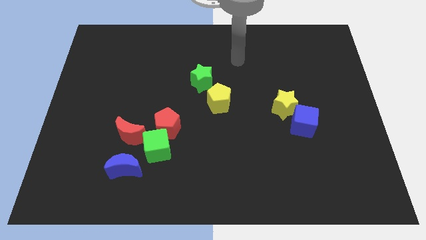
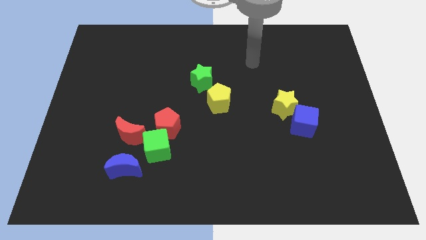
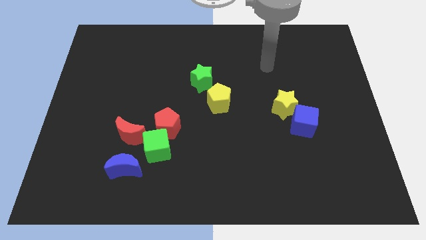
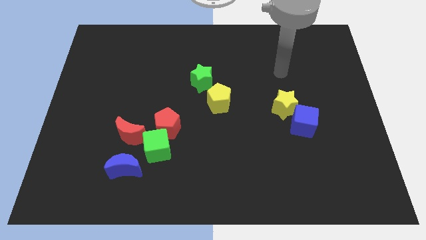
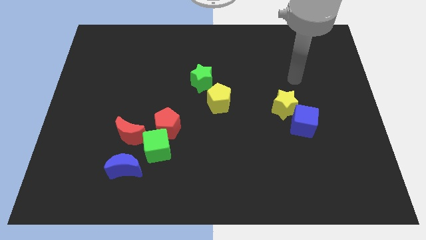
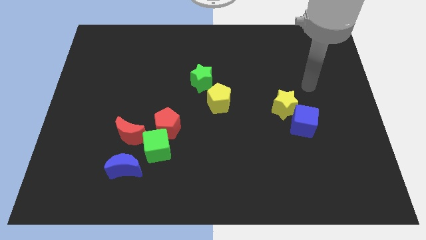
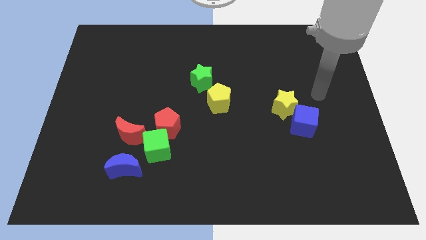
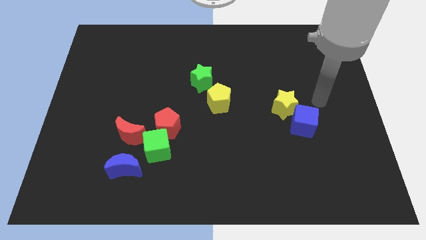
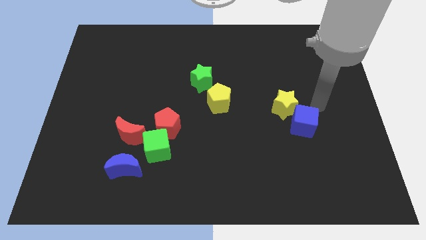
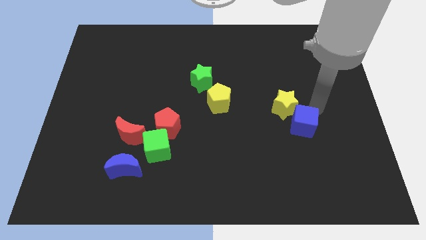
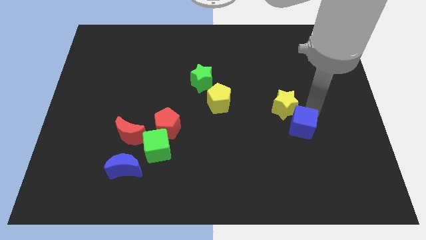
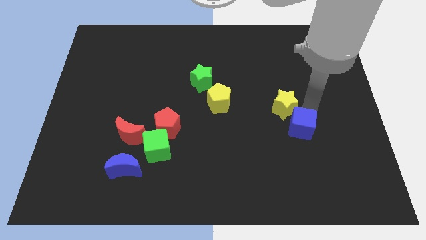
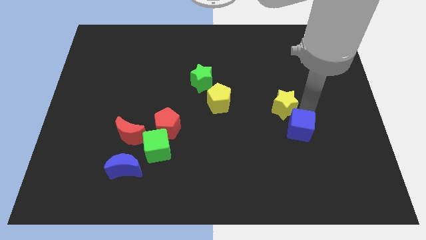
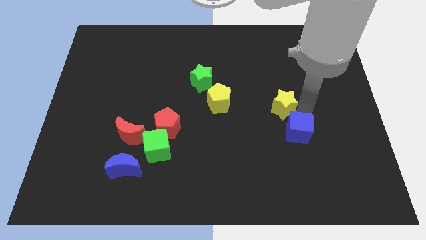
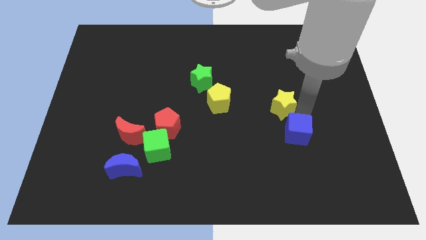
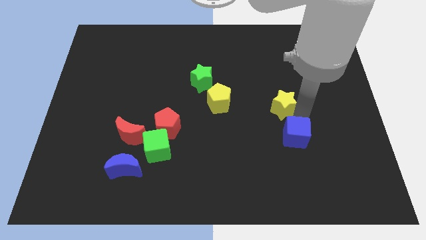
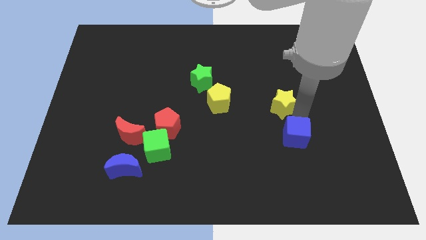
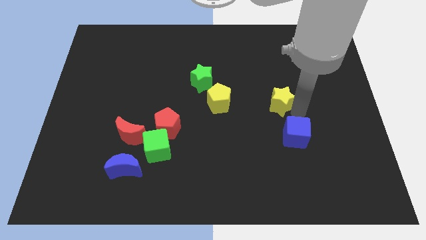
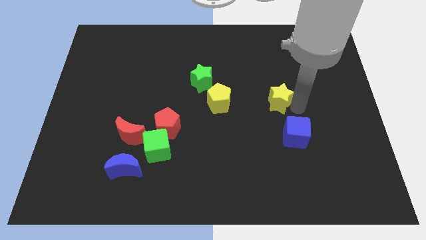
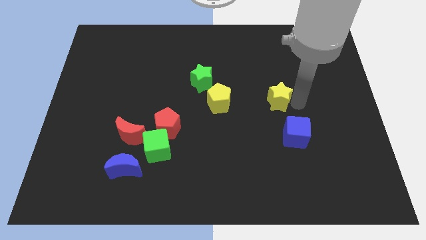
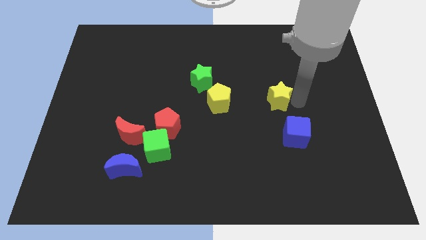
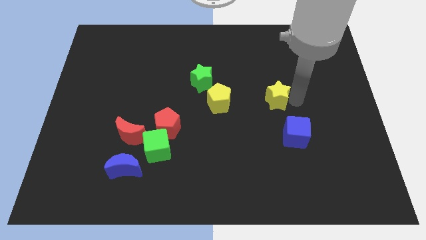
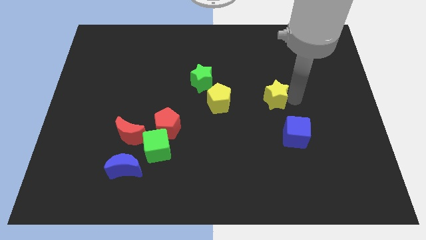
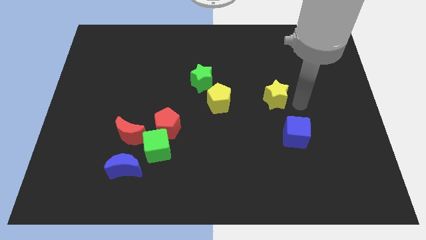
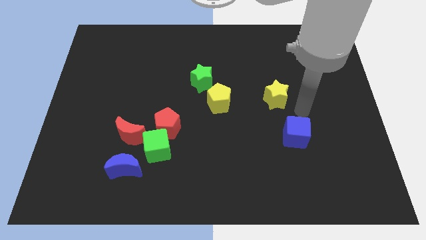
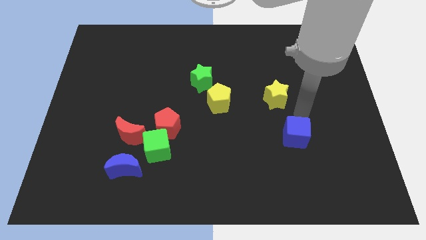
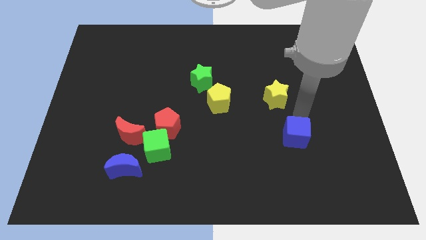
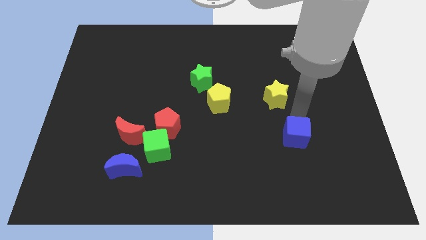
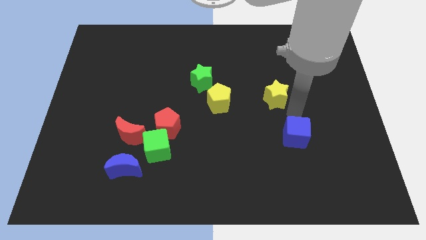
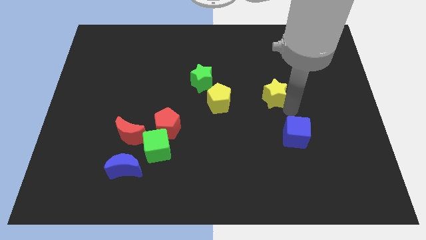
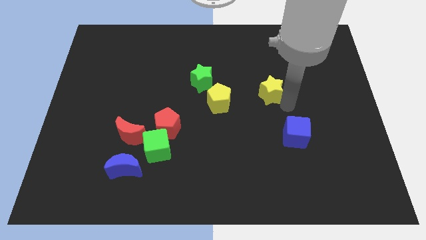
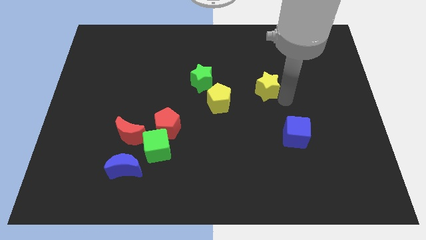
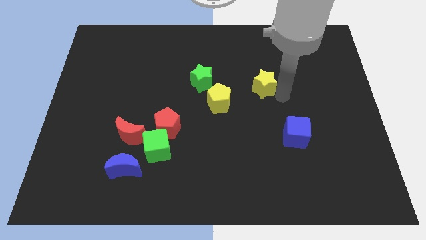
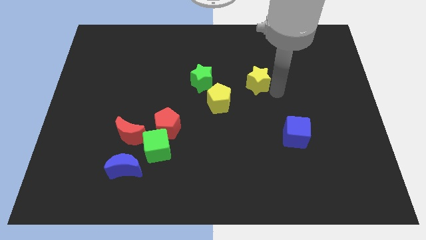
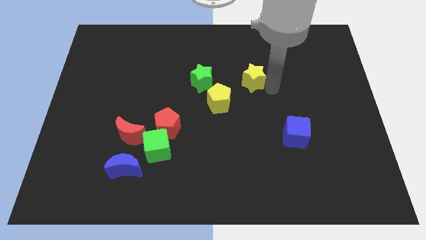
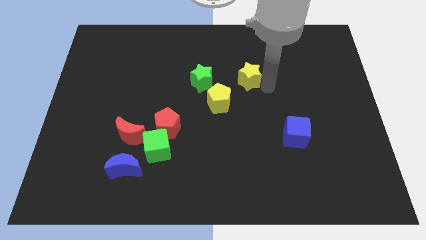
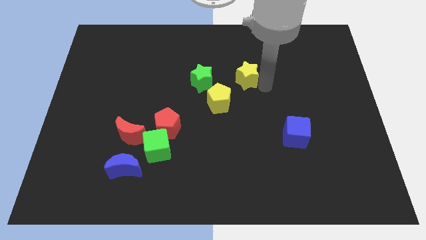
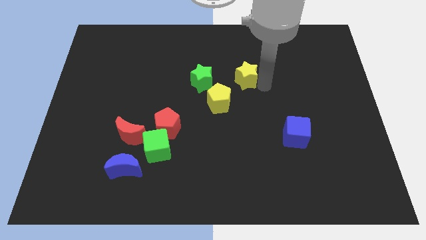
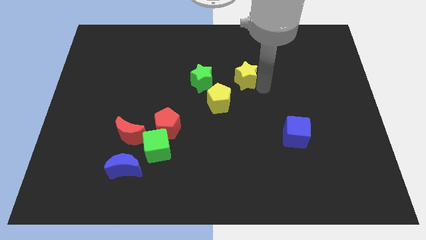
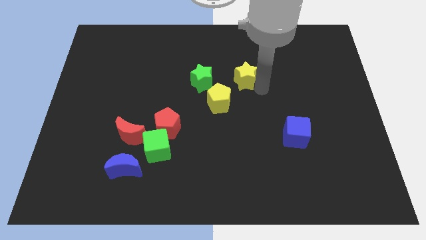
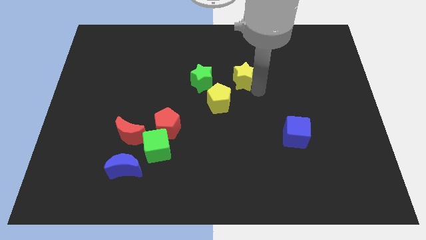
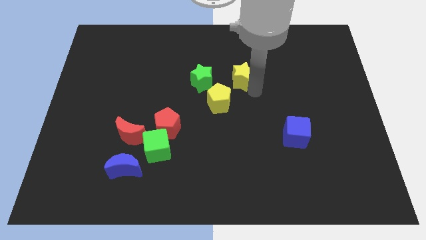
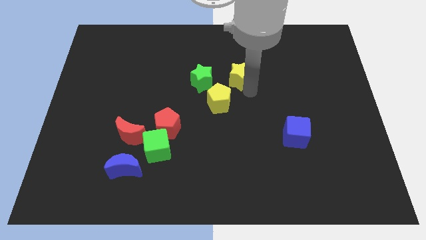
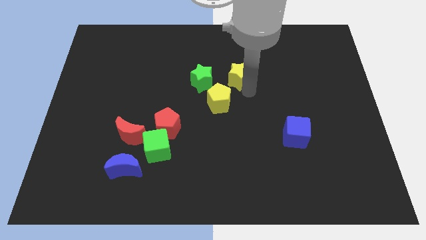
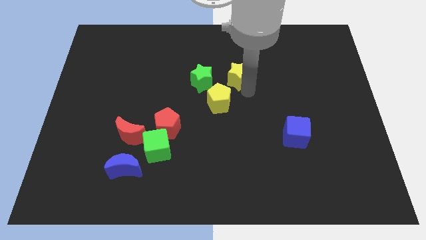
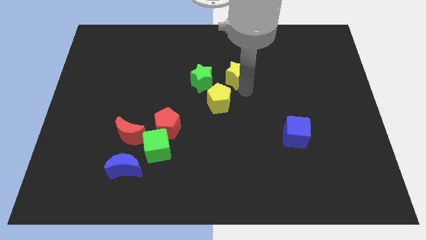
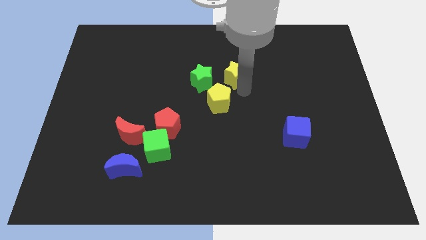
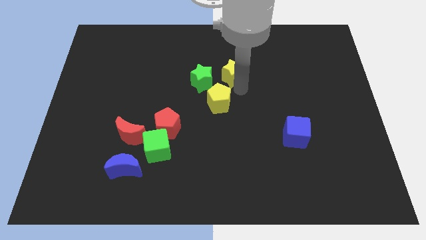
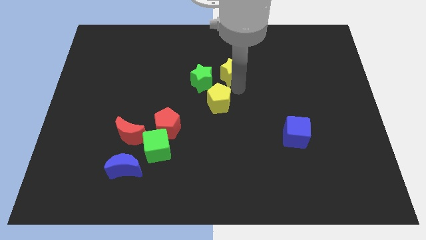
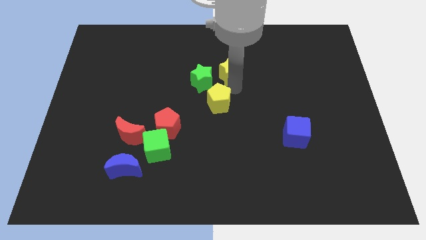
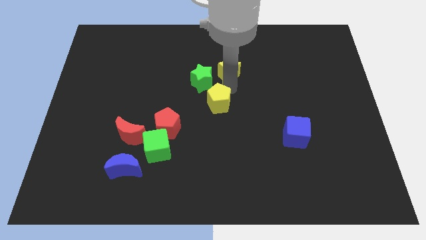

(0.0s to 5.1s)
separate yellow star from the blue cube

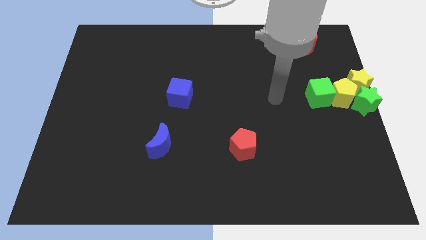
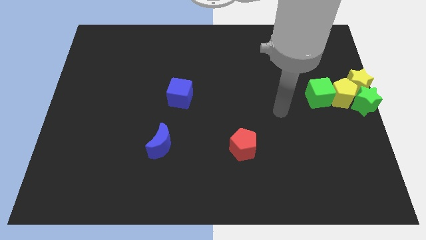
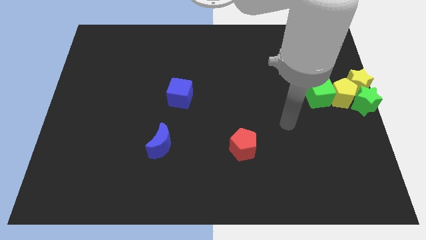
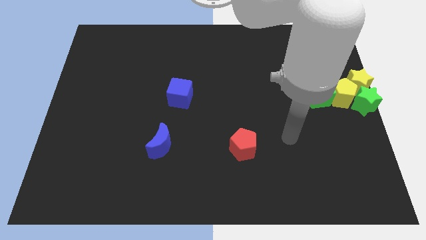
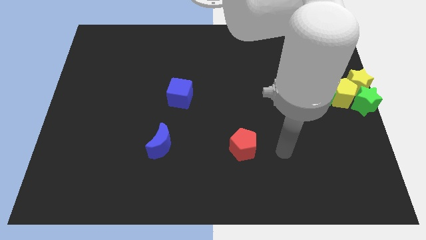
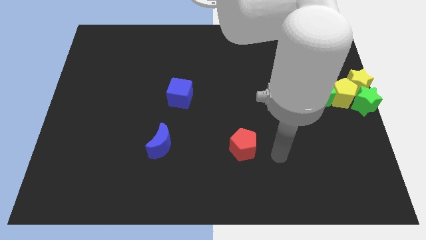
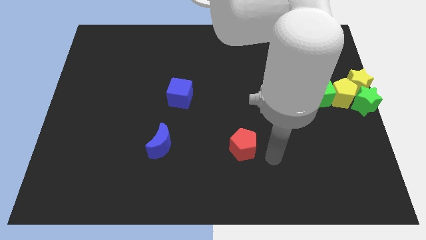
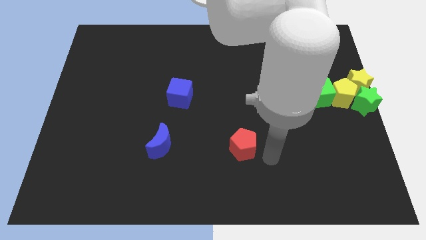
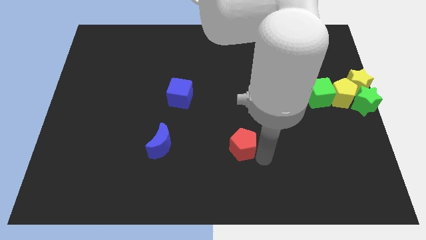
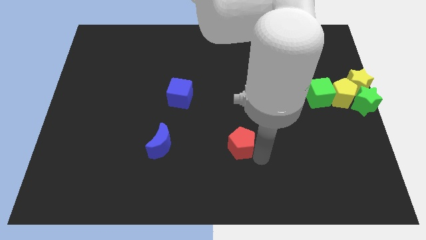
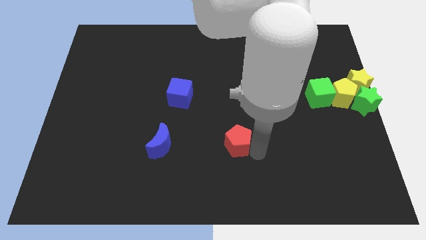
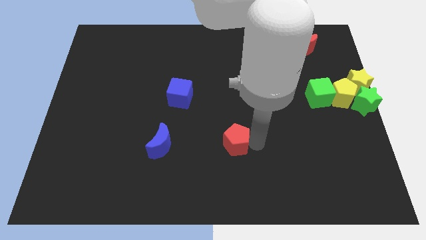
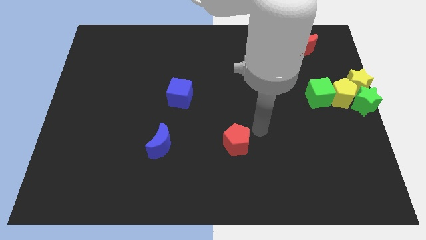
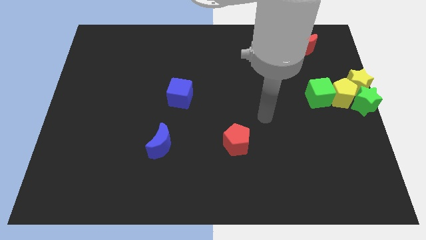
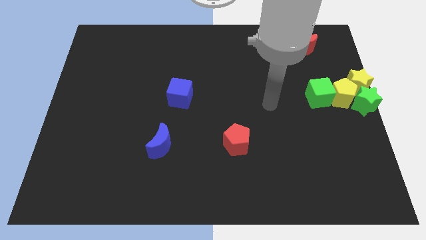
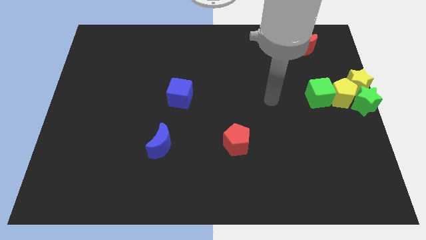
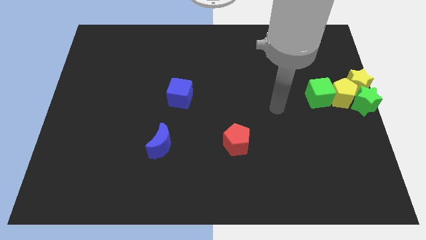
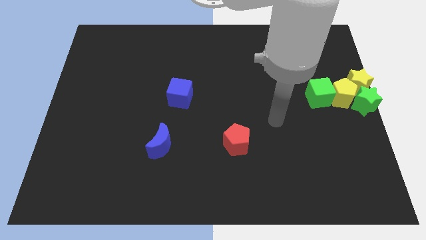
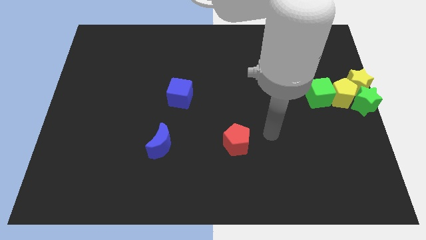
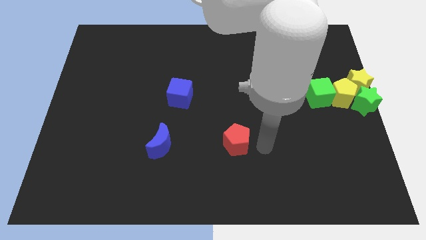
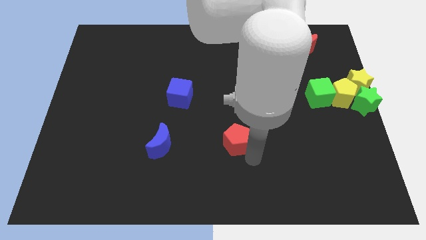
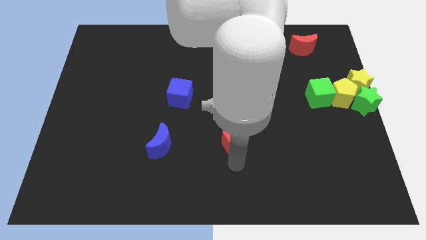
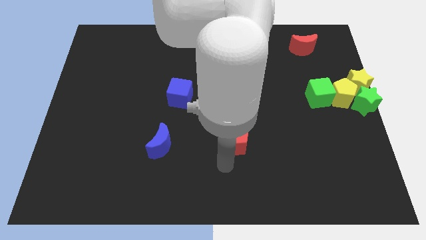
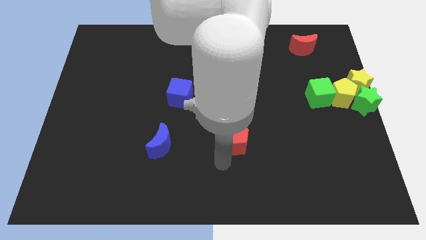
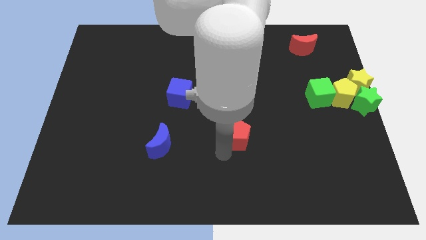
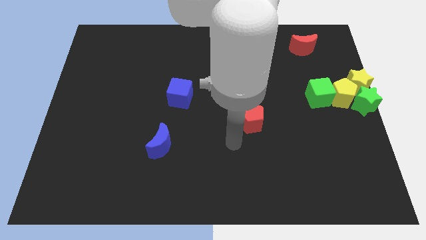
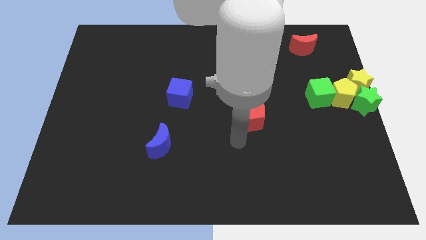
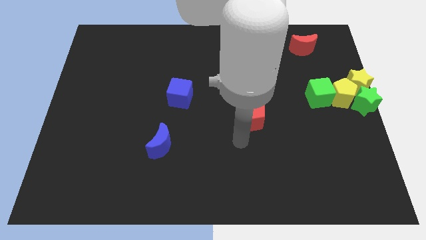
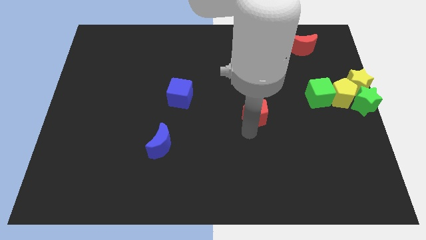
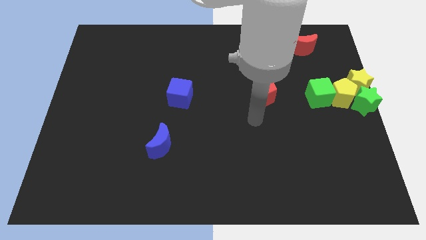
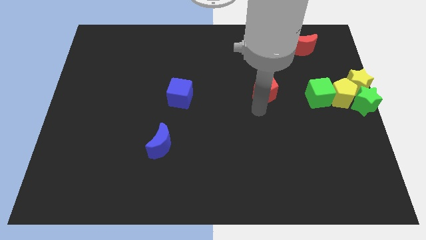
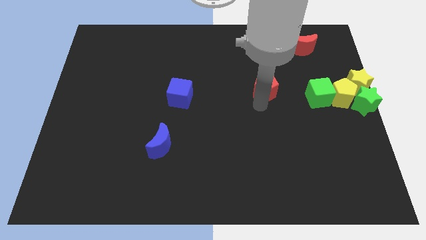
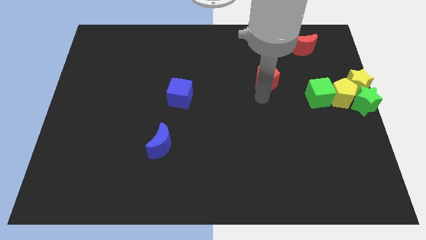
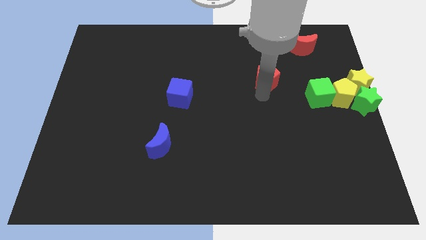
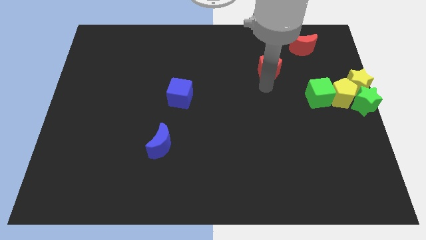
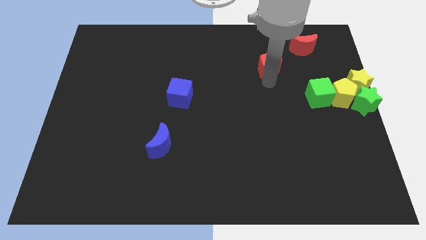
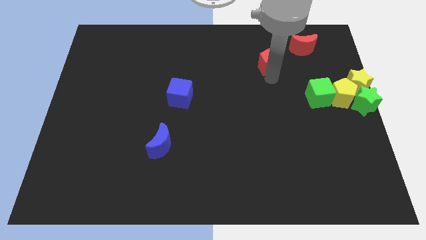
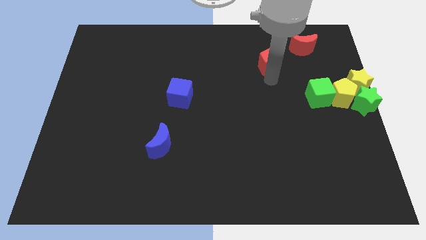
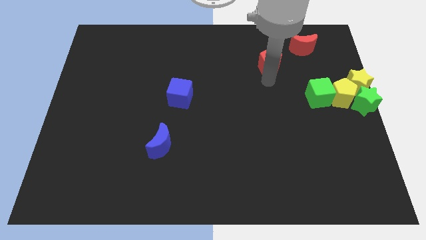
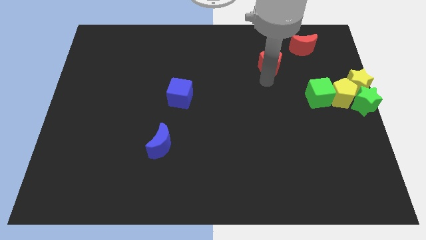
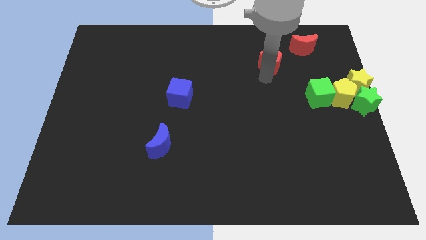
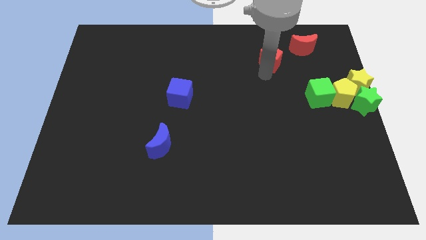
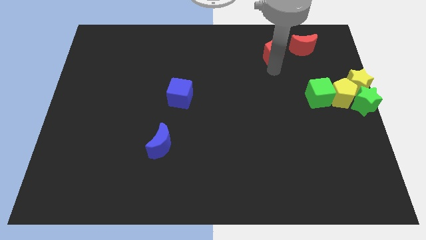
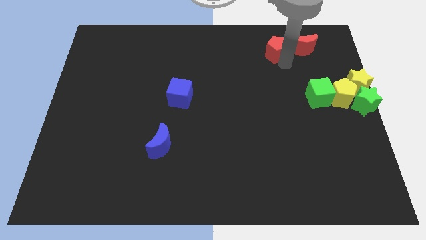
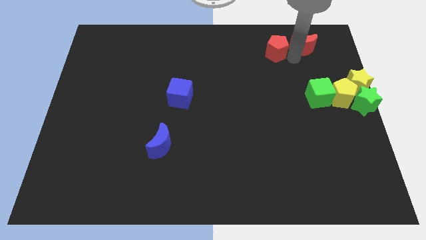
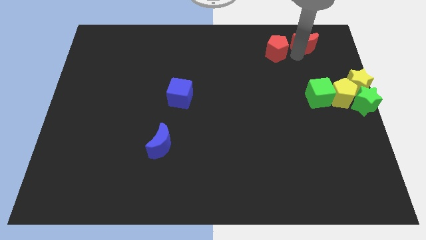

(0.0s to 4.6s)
move red pentagon close to the red moon
